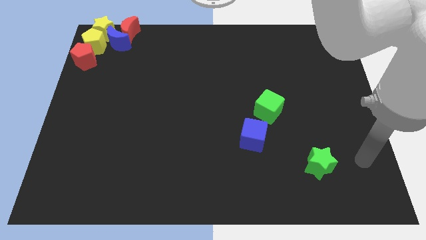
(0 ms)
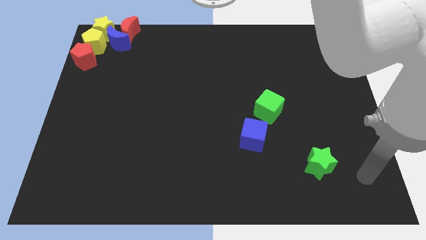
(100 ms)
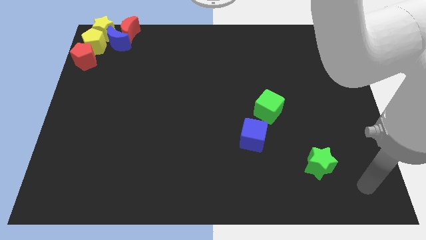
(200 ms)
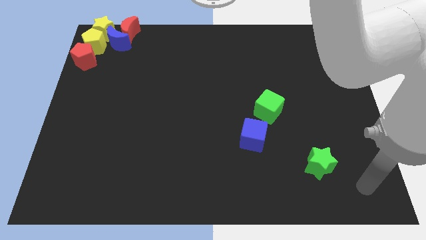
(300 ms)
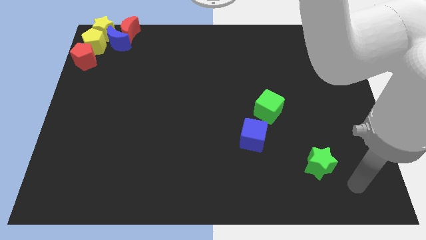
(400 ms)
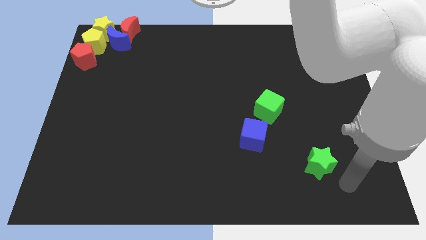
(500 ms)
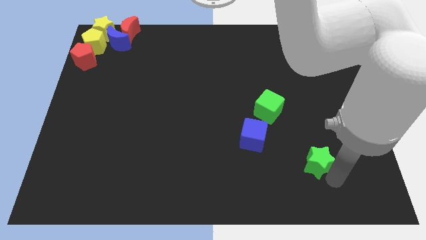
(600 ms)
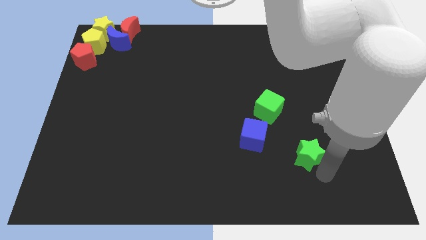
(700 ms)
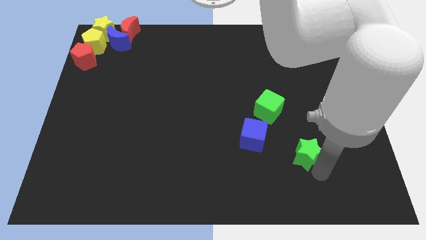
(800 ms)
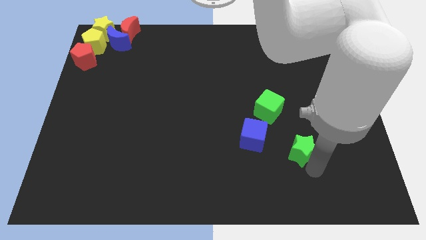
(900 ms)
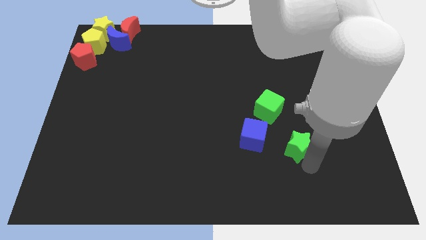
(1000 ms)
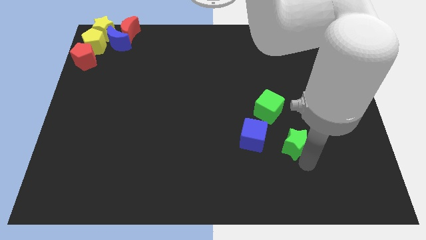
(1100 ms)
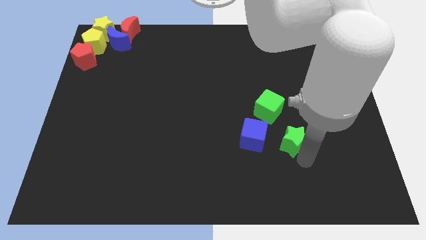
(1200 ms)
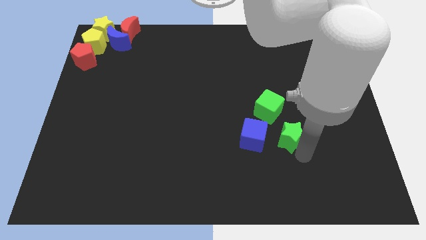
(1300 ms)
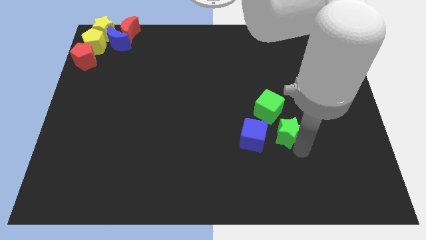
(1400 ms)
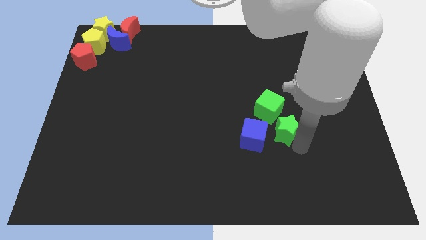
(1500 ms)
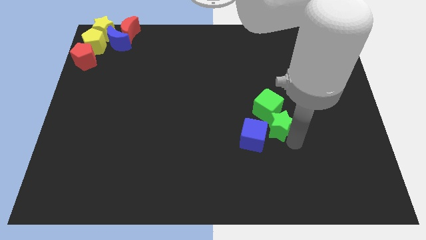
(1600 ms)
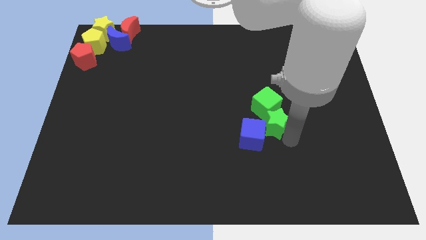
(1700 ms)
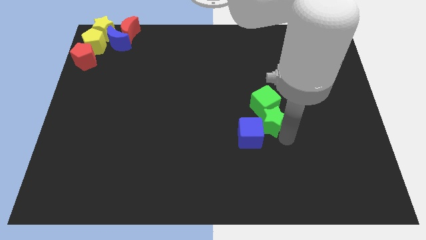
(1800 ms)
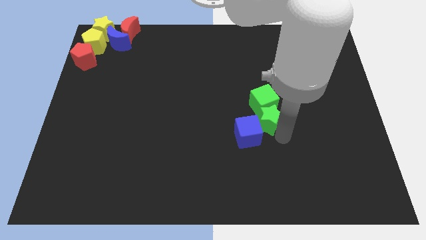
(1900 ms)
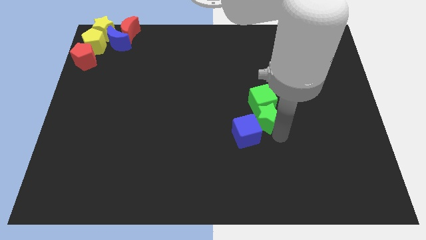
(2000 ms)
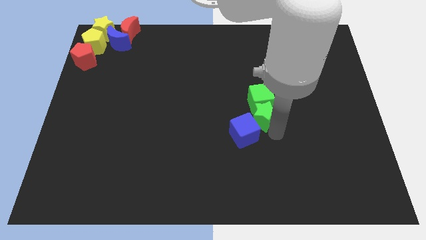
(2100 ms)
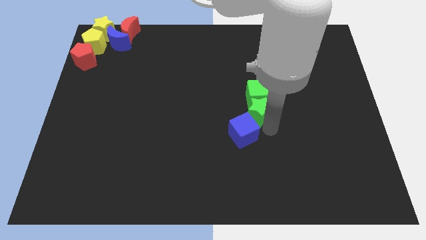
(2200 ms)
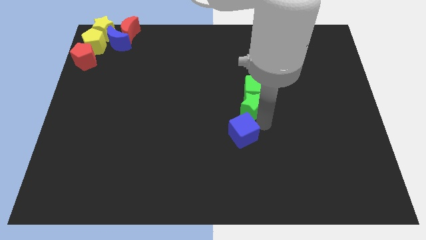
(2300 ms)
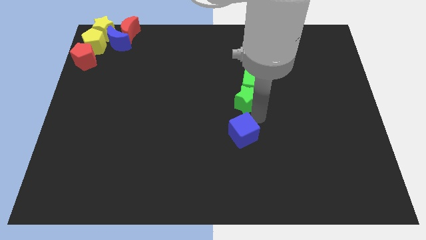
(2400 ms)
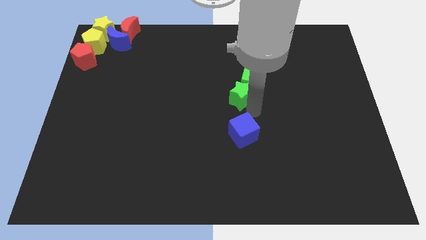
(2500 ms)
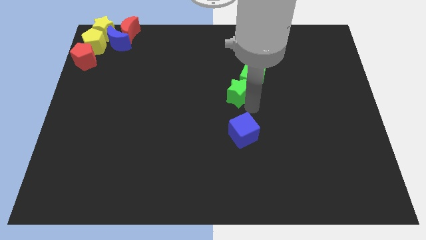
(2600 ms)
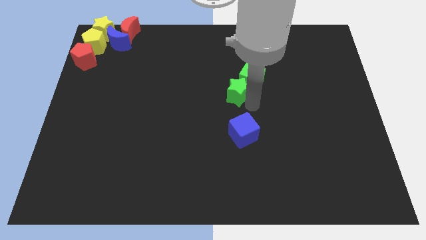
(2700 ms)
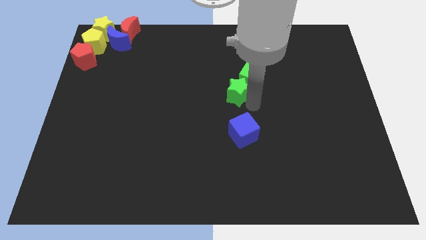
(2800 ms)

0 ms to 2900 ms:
push the green cube towards the top center with the green star

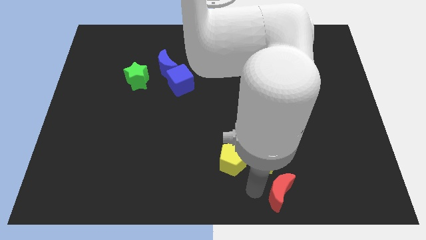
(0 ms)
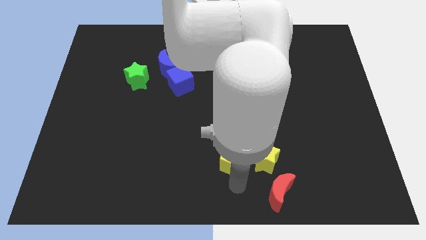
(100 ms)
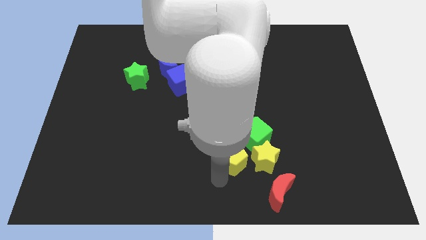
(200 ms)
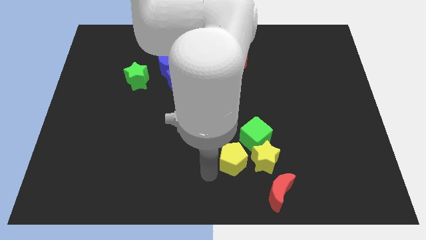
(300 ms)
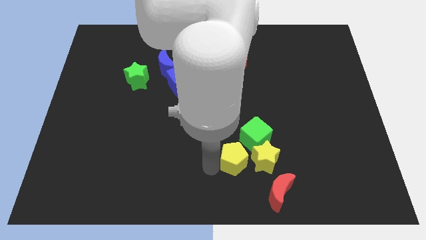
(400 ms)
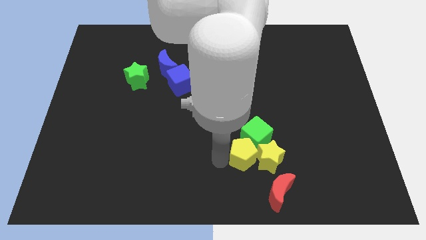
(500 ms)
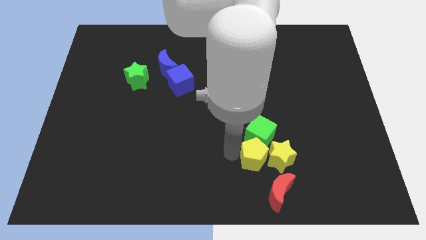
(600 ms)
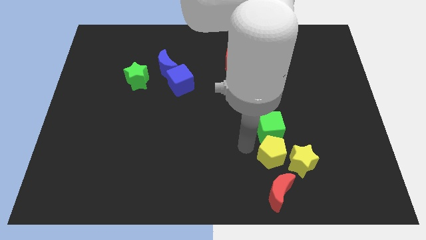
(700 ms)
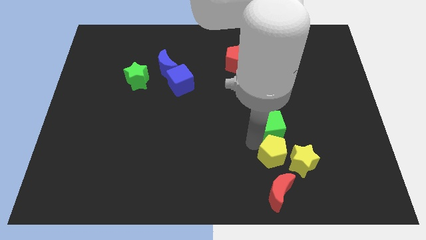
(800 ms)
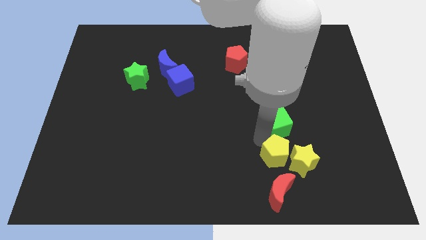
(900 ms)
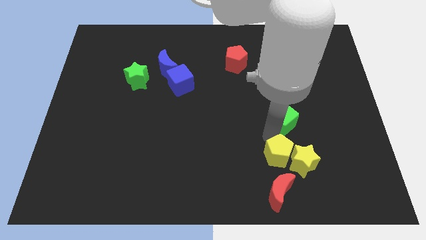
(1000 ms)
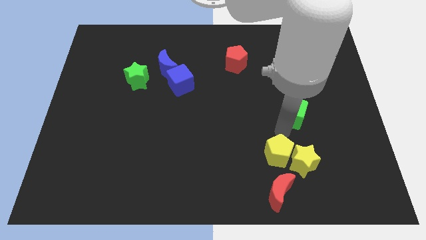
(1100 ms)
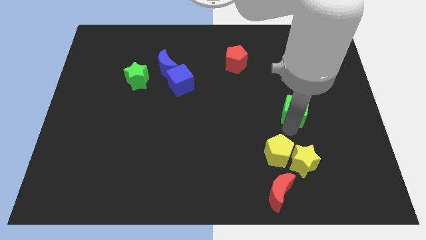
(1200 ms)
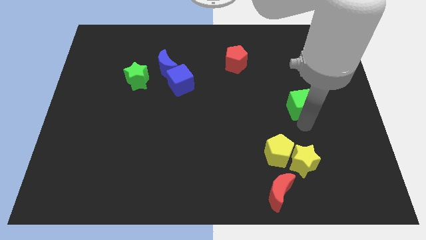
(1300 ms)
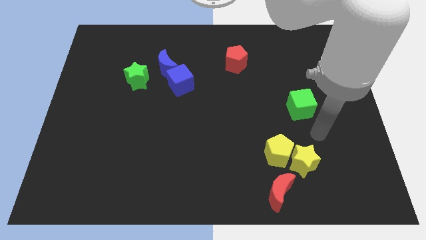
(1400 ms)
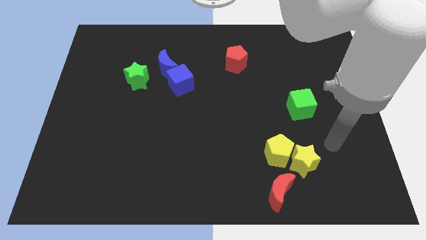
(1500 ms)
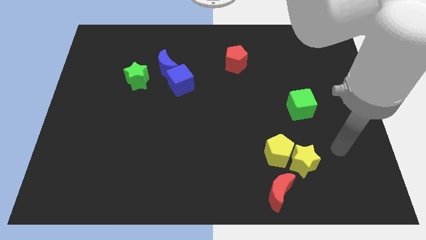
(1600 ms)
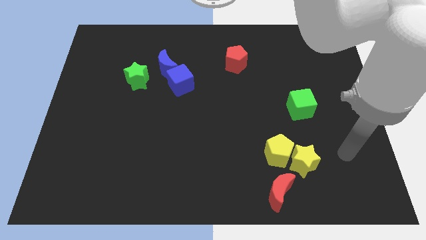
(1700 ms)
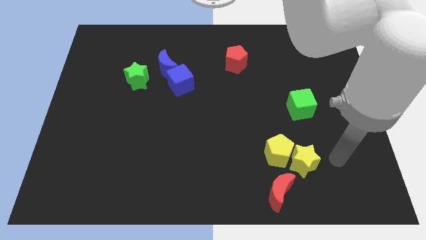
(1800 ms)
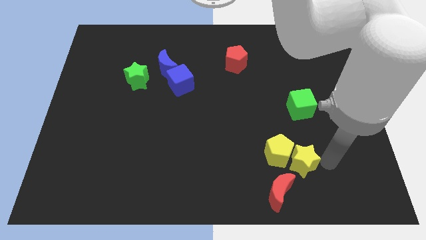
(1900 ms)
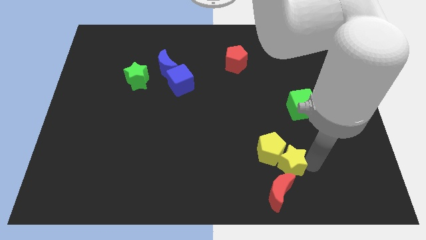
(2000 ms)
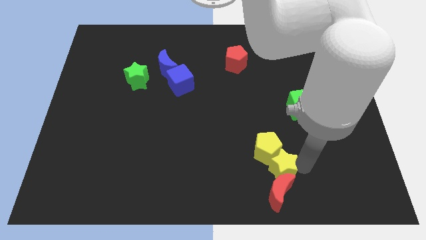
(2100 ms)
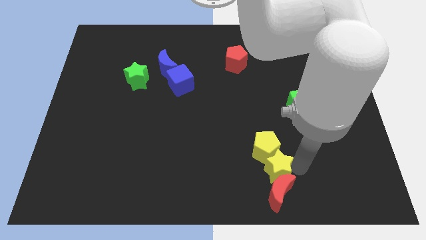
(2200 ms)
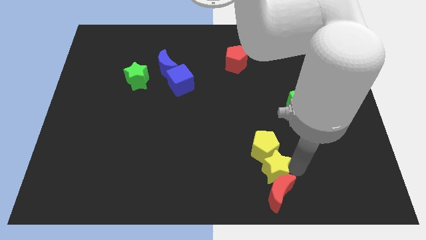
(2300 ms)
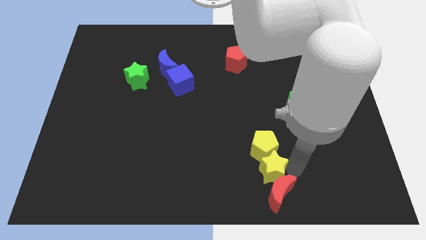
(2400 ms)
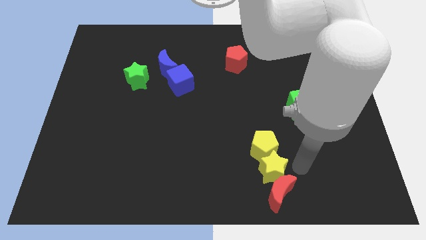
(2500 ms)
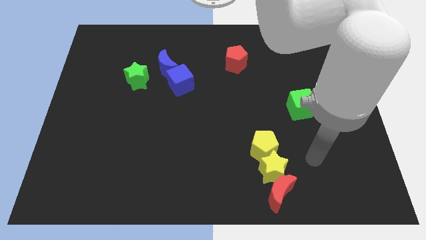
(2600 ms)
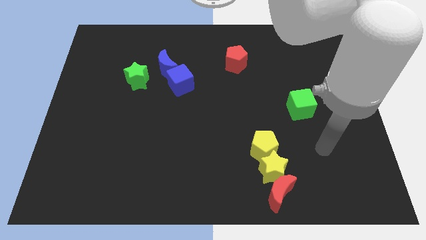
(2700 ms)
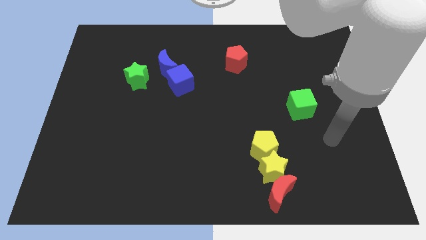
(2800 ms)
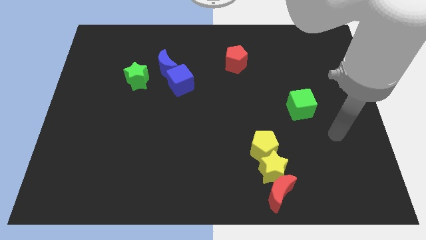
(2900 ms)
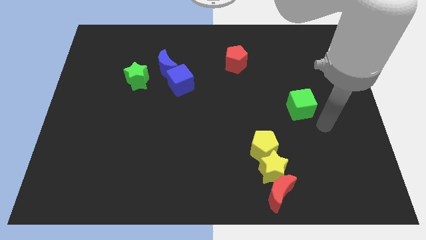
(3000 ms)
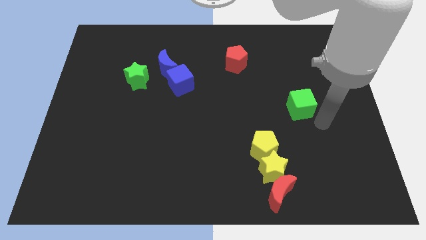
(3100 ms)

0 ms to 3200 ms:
move the yellow star above the red crescent

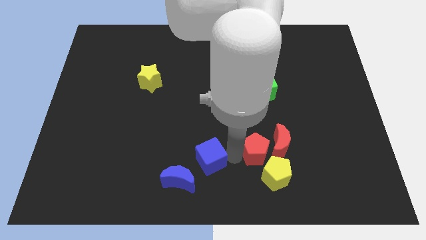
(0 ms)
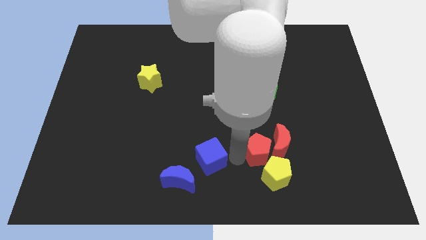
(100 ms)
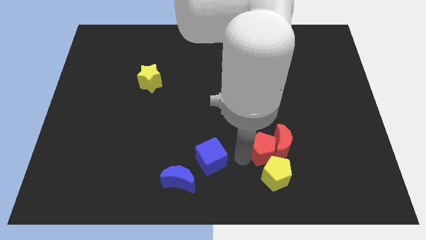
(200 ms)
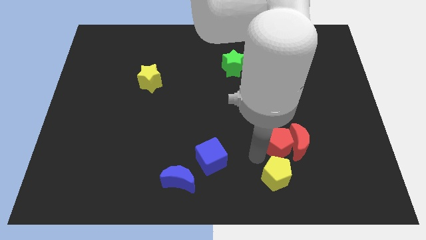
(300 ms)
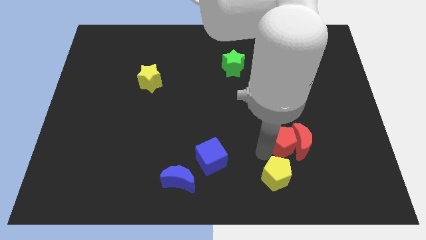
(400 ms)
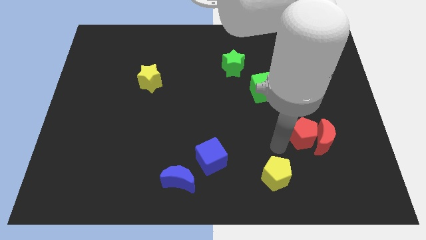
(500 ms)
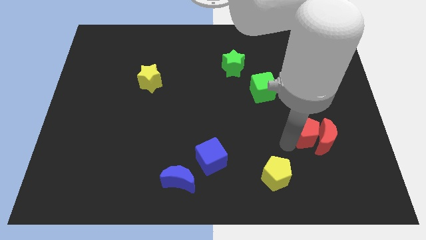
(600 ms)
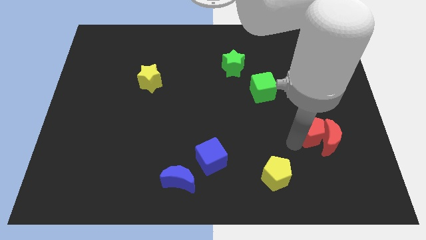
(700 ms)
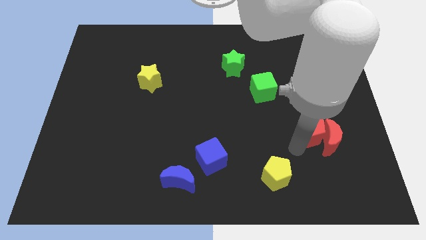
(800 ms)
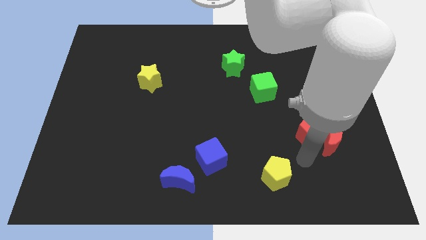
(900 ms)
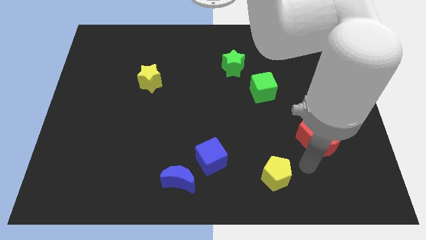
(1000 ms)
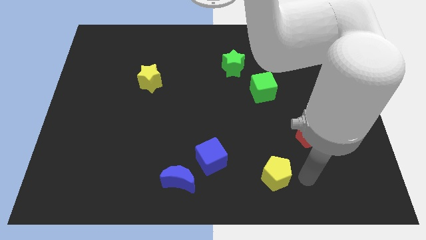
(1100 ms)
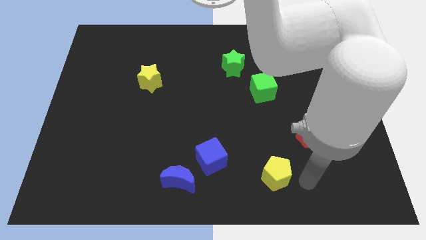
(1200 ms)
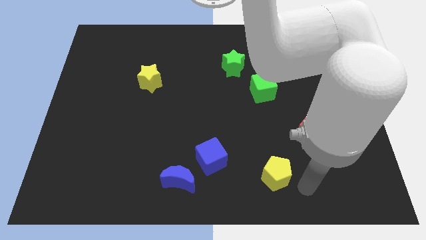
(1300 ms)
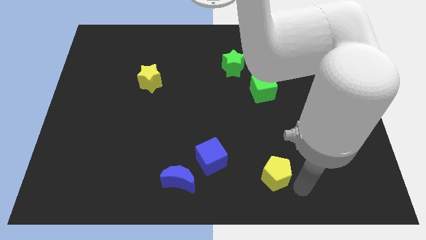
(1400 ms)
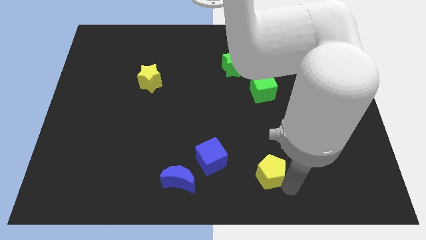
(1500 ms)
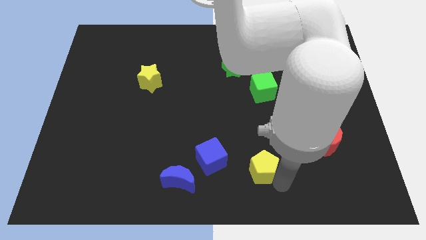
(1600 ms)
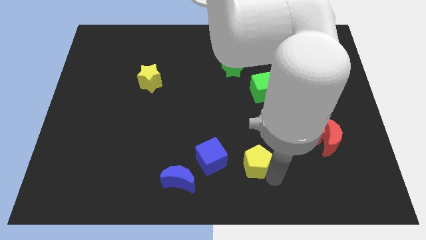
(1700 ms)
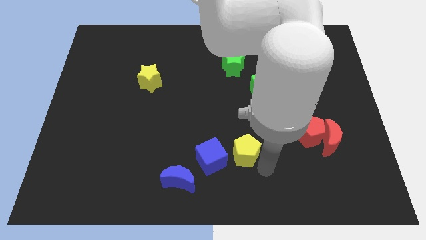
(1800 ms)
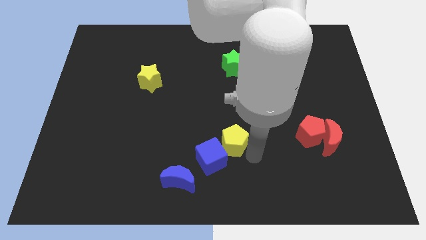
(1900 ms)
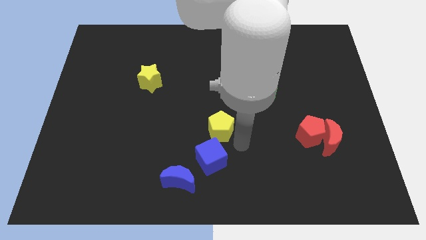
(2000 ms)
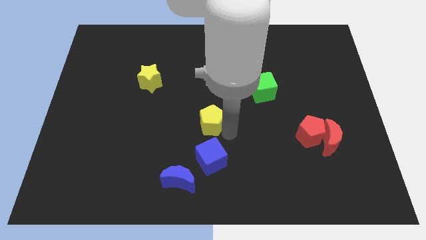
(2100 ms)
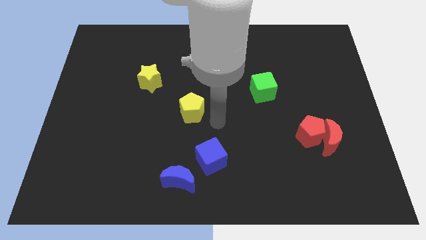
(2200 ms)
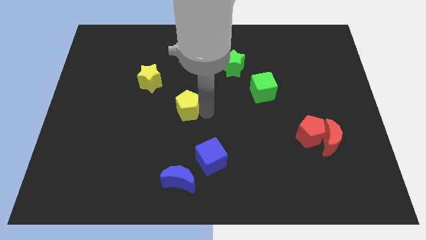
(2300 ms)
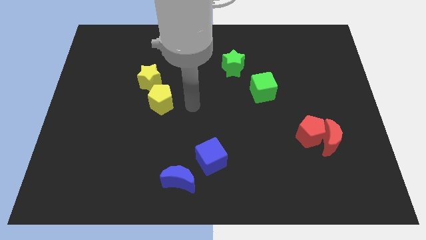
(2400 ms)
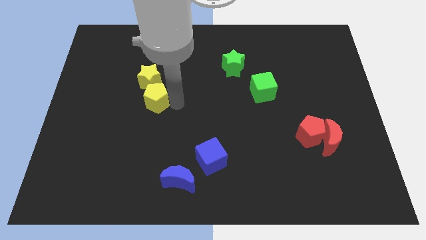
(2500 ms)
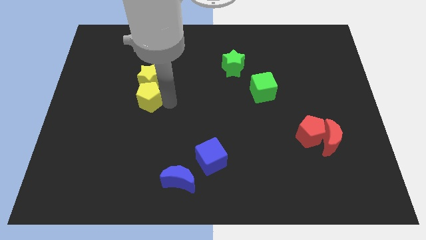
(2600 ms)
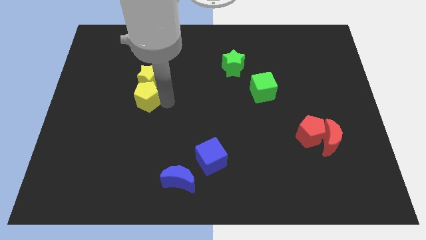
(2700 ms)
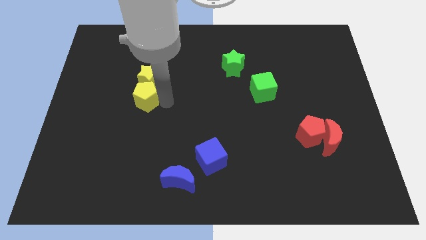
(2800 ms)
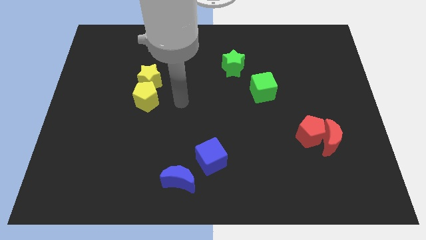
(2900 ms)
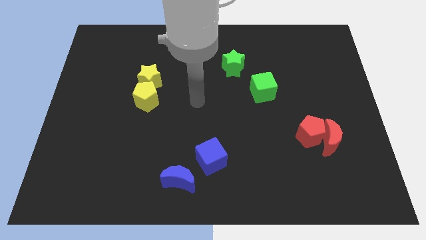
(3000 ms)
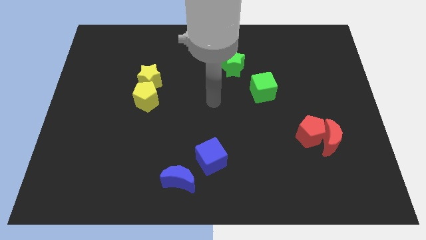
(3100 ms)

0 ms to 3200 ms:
put yellow pentagon below yellow star
